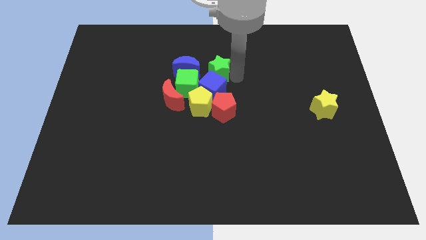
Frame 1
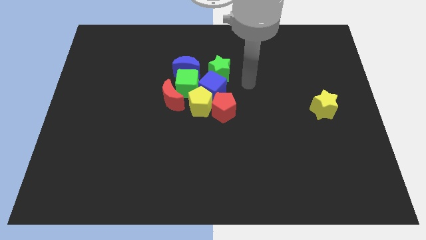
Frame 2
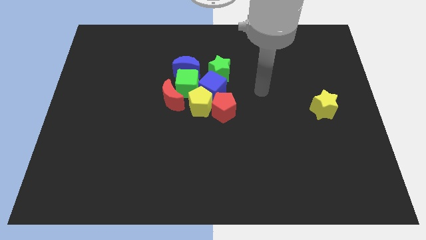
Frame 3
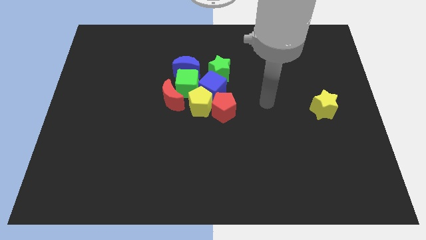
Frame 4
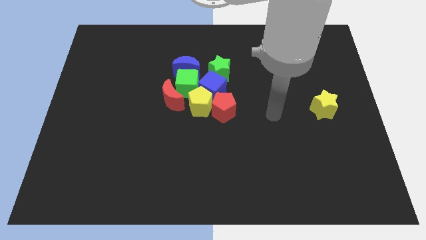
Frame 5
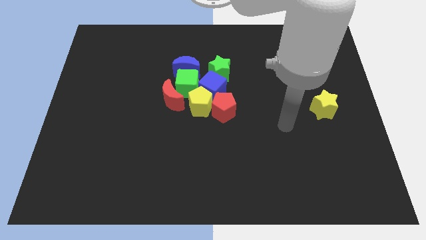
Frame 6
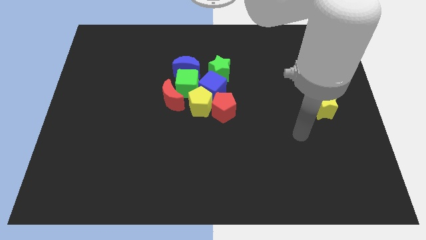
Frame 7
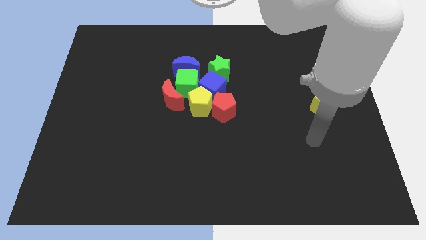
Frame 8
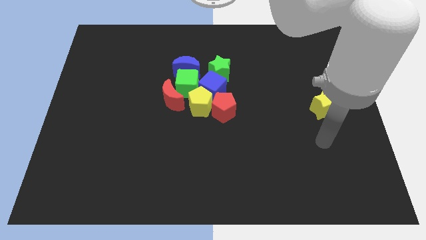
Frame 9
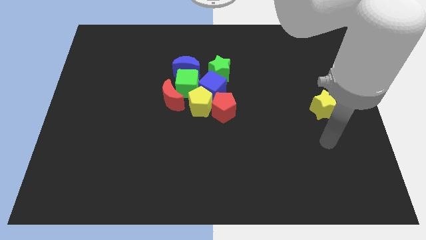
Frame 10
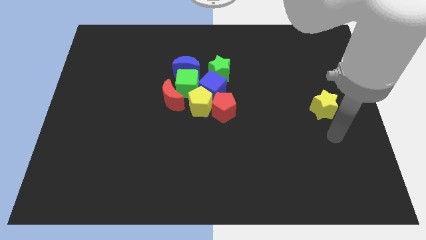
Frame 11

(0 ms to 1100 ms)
move your arm to the bottom right of the yellow star

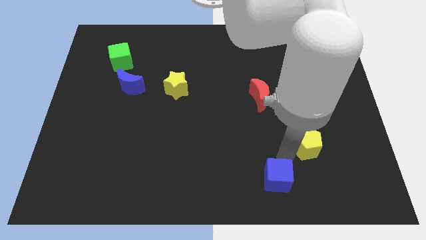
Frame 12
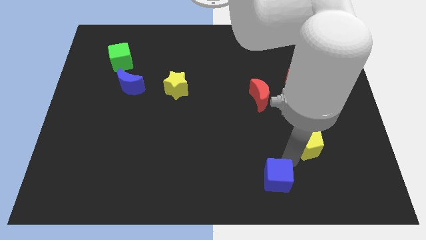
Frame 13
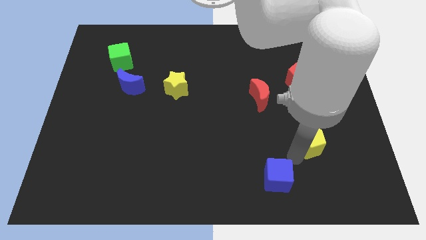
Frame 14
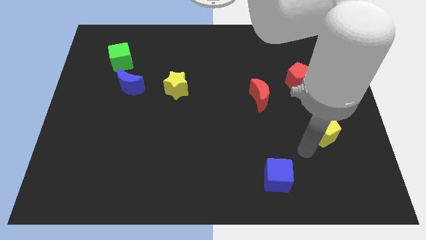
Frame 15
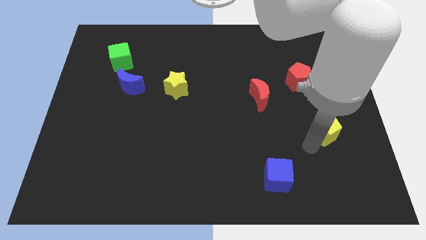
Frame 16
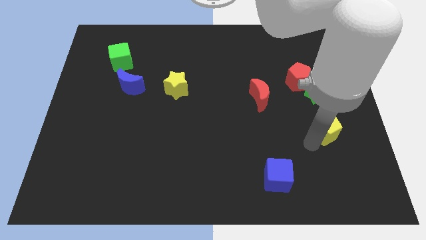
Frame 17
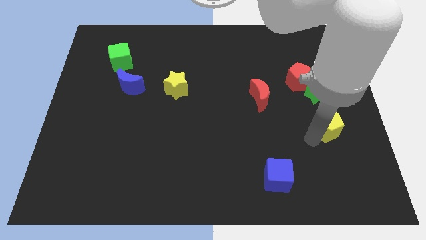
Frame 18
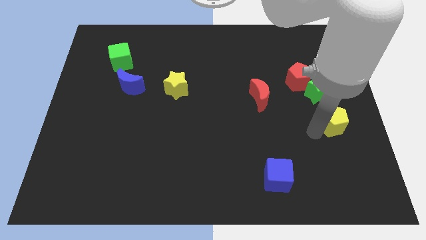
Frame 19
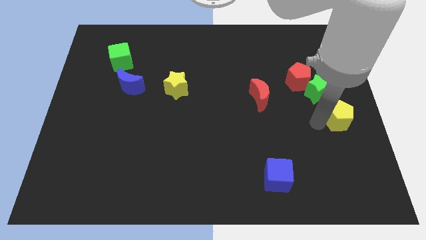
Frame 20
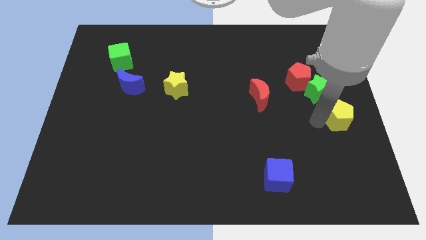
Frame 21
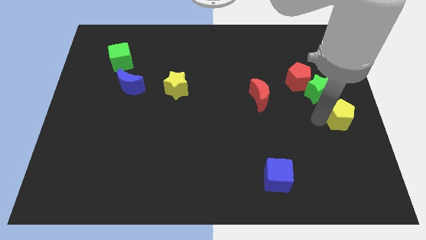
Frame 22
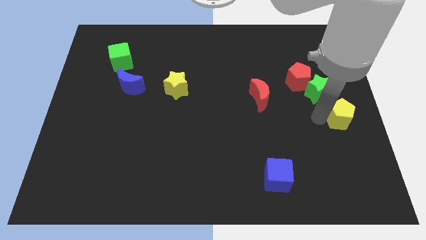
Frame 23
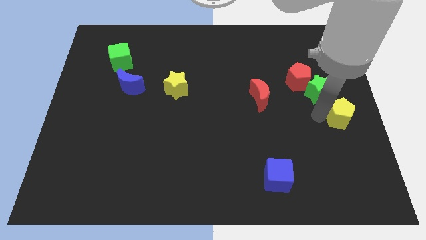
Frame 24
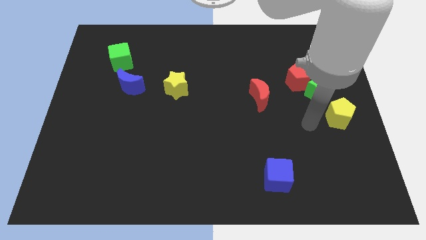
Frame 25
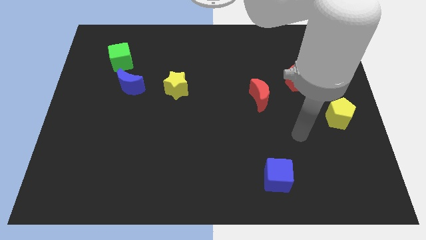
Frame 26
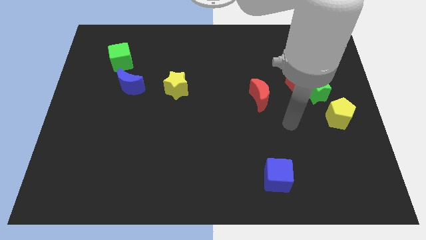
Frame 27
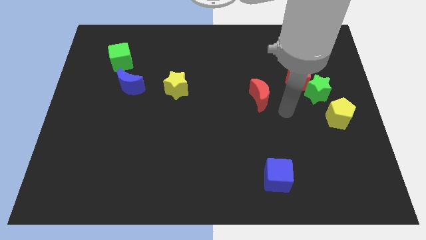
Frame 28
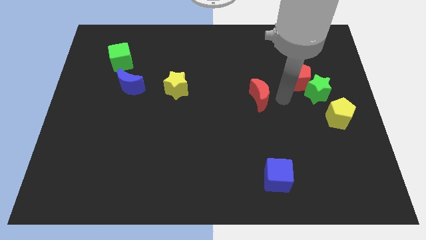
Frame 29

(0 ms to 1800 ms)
move the yellow pentagon towards the right center of the board

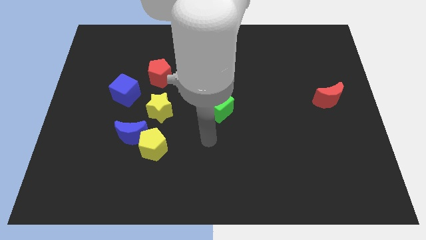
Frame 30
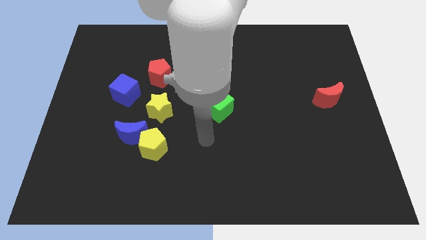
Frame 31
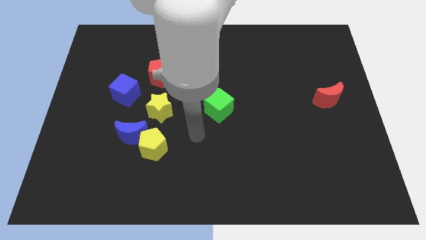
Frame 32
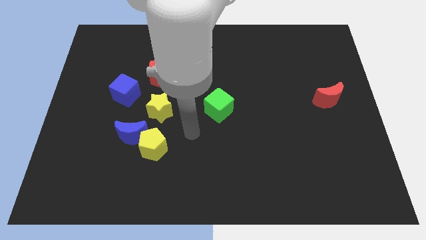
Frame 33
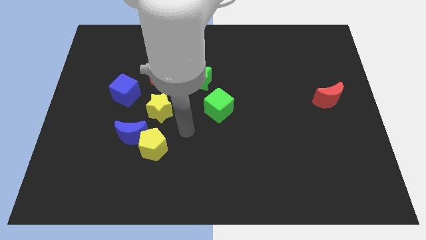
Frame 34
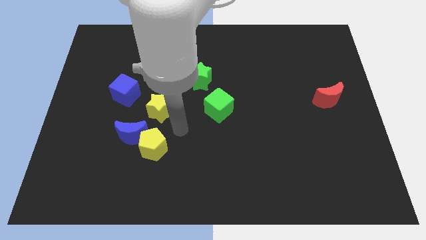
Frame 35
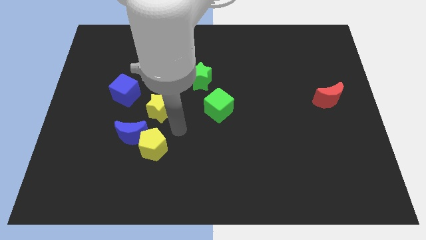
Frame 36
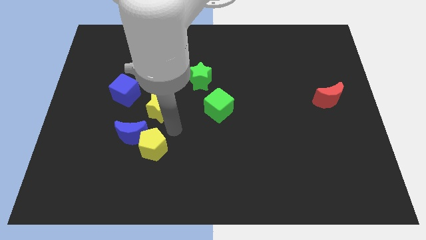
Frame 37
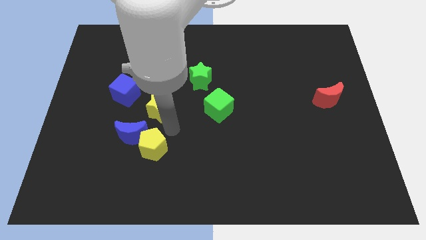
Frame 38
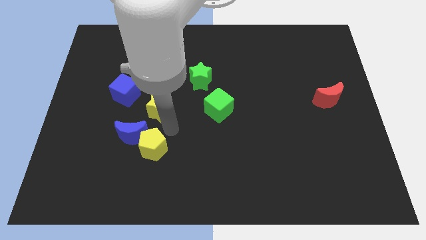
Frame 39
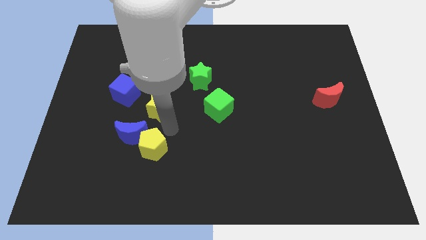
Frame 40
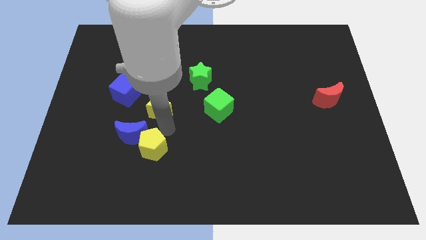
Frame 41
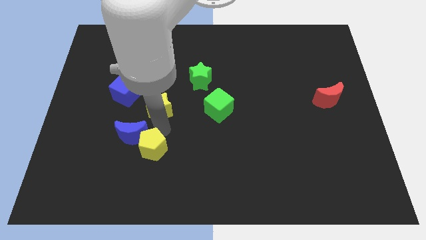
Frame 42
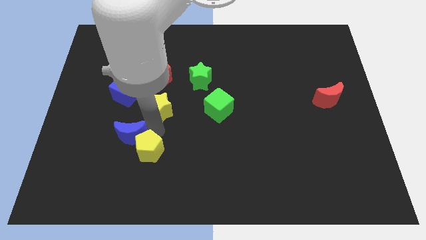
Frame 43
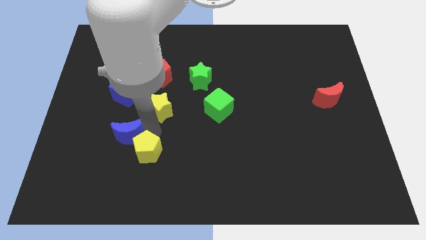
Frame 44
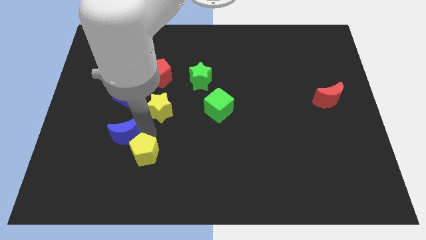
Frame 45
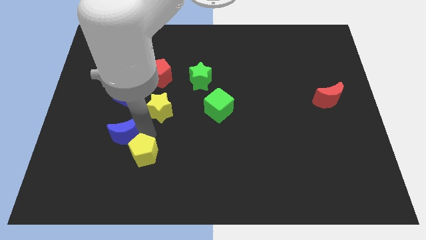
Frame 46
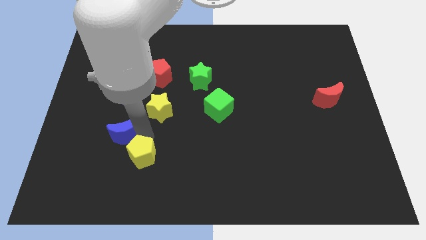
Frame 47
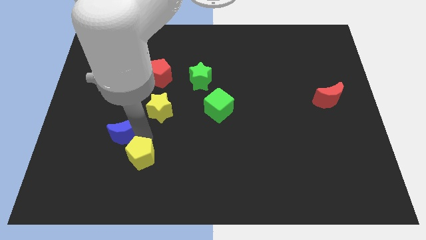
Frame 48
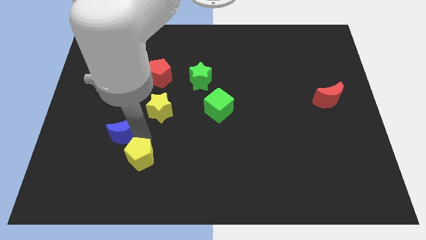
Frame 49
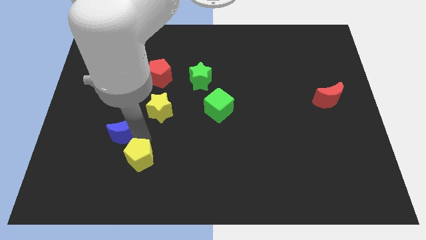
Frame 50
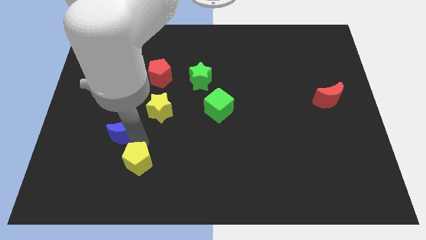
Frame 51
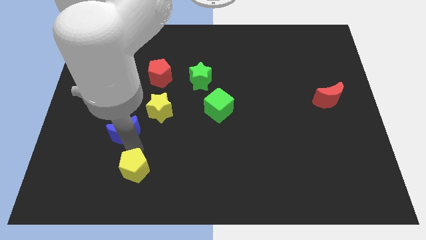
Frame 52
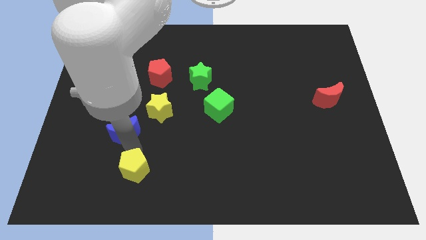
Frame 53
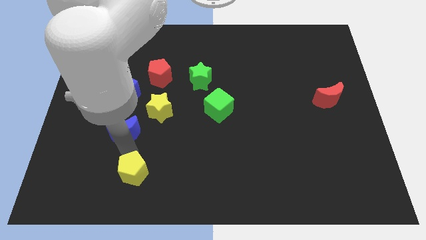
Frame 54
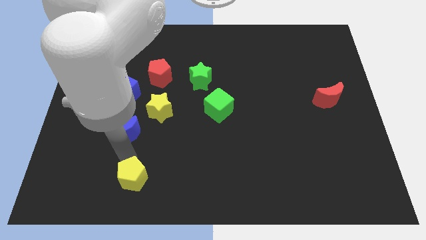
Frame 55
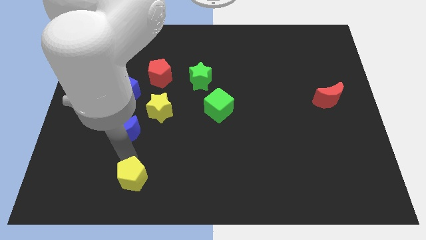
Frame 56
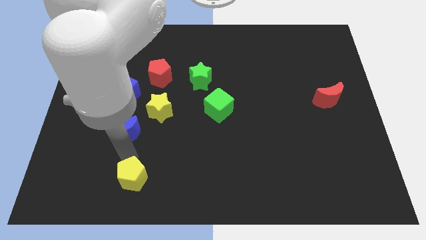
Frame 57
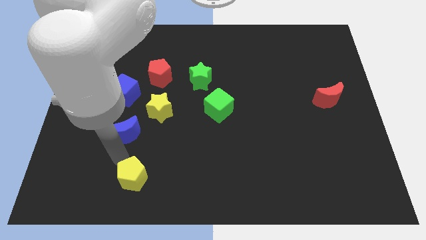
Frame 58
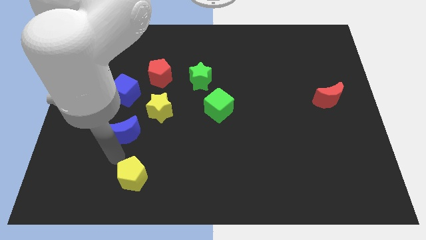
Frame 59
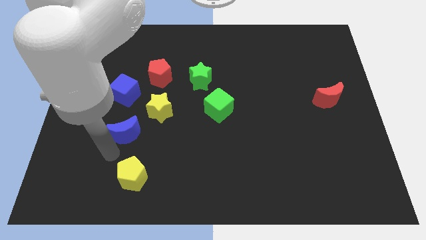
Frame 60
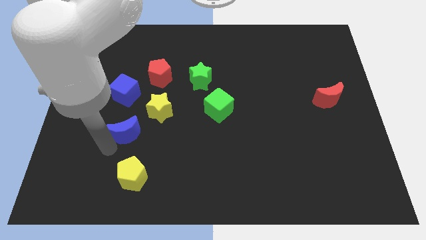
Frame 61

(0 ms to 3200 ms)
push yellow pentagon to the bottom of the blue crescent

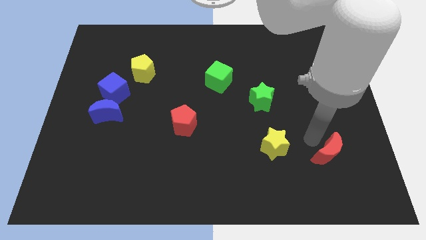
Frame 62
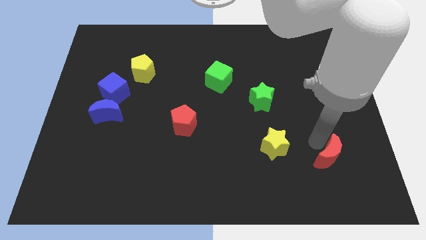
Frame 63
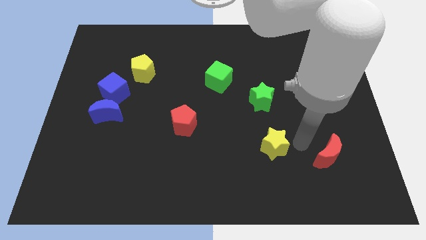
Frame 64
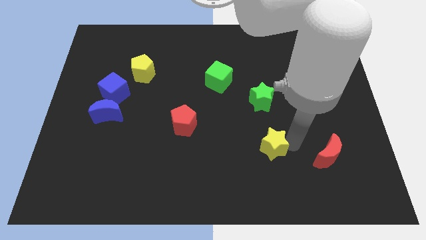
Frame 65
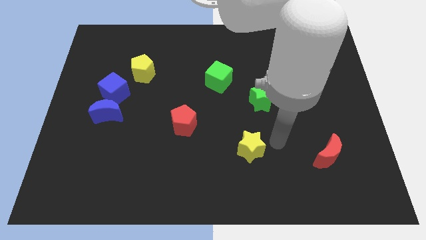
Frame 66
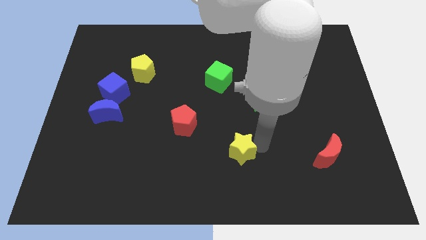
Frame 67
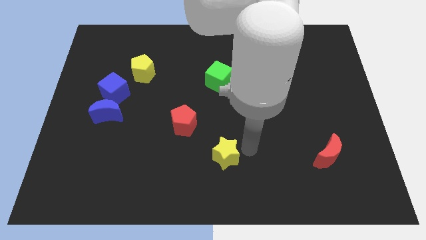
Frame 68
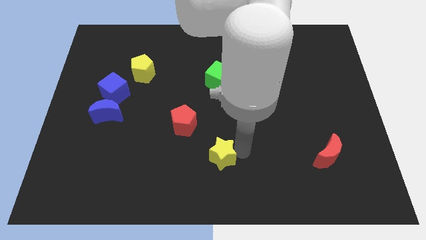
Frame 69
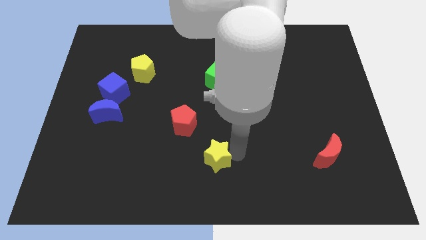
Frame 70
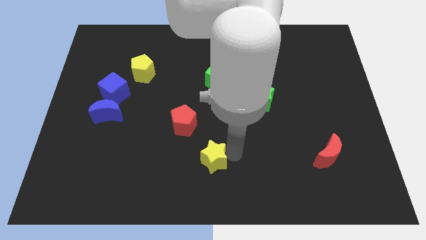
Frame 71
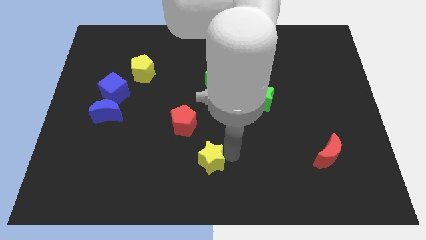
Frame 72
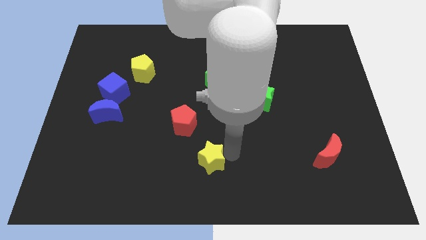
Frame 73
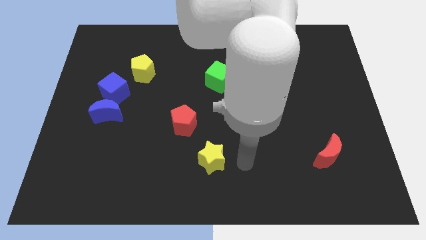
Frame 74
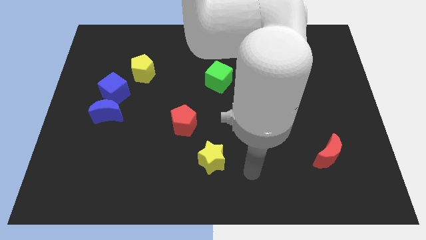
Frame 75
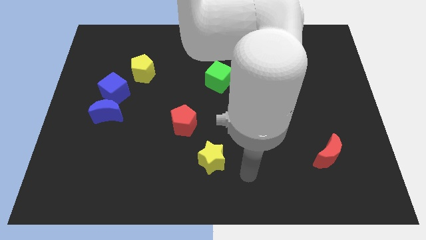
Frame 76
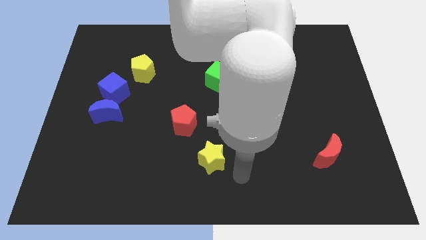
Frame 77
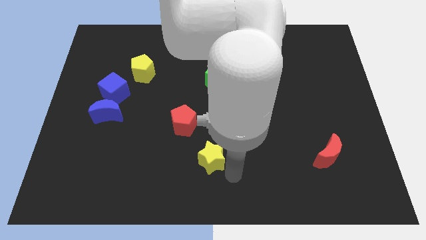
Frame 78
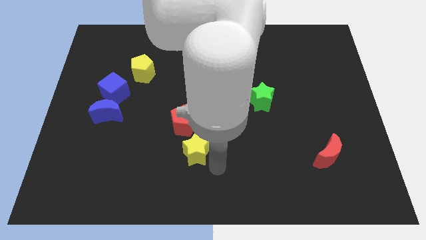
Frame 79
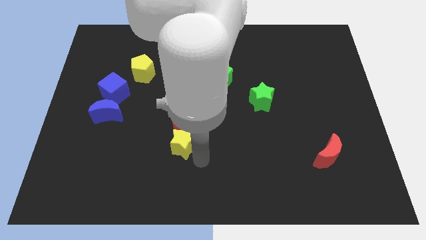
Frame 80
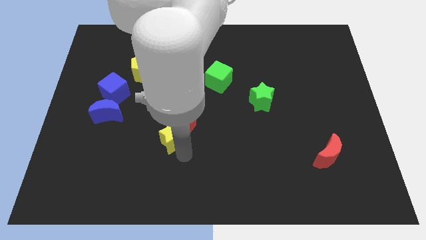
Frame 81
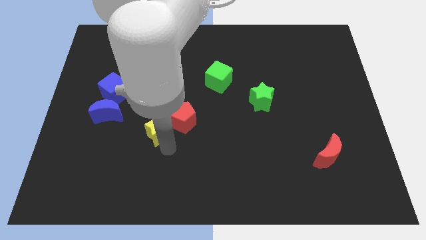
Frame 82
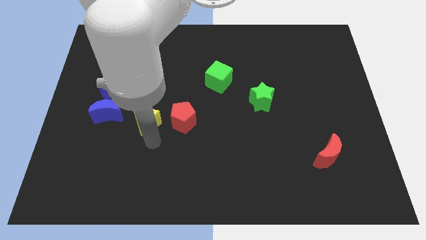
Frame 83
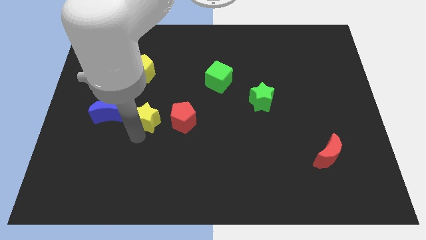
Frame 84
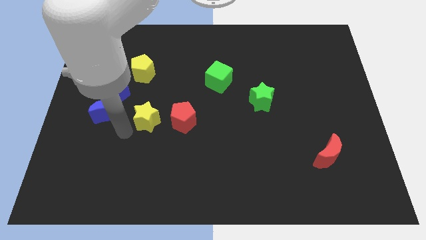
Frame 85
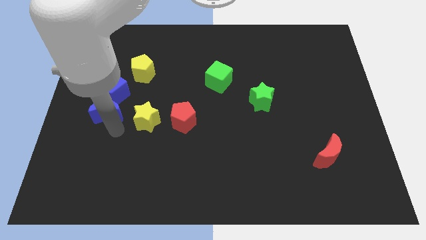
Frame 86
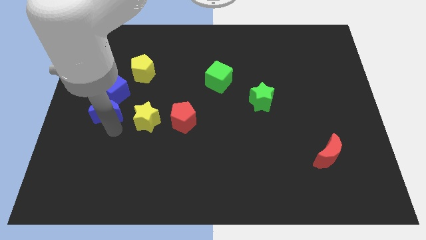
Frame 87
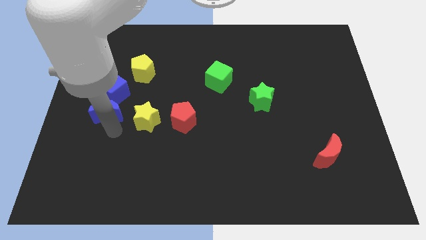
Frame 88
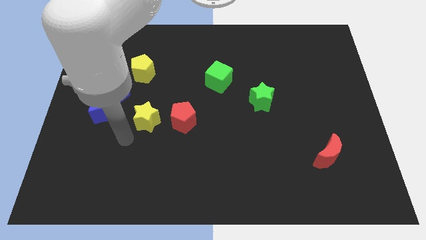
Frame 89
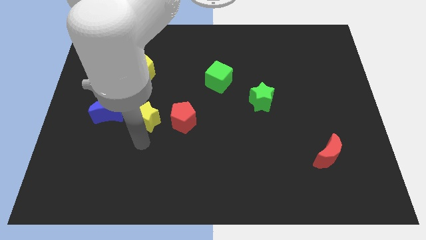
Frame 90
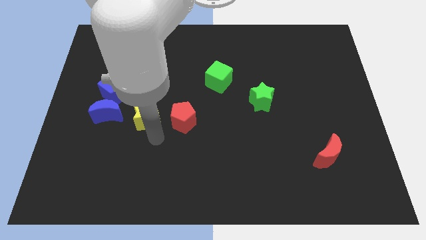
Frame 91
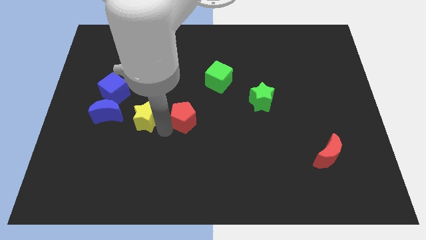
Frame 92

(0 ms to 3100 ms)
separate yellow star from red moon
